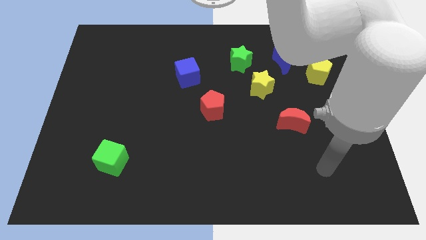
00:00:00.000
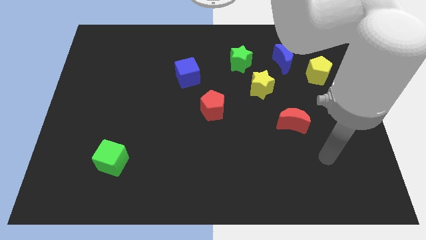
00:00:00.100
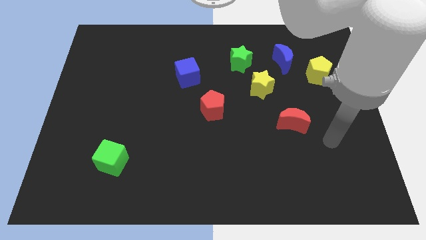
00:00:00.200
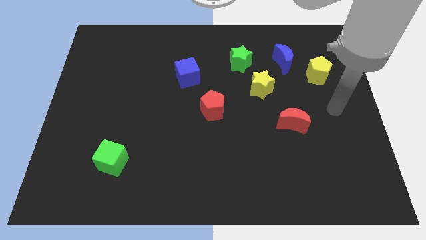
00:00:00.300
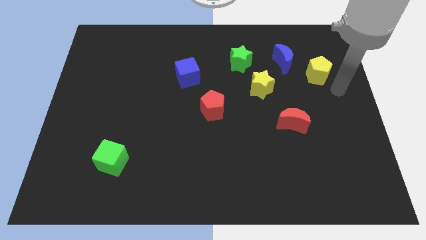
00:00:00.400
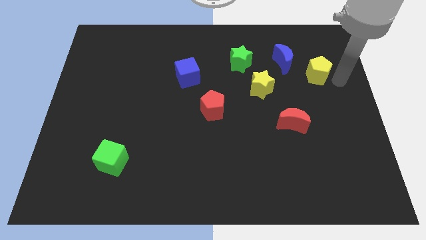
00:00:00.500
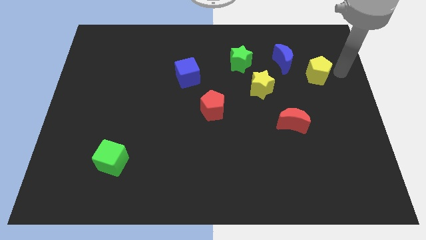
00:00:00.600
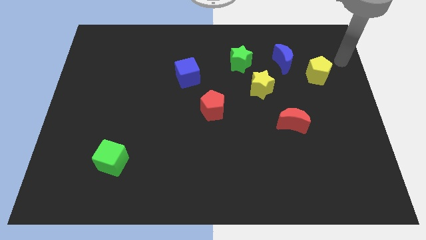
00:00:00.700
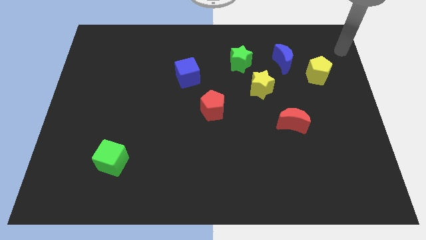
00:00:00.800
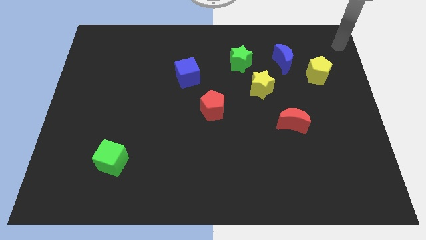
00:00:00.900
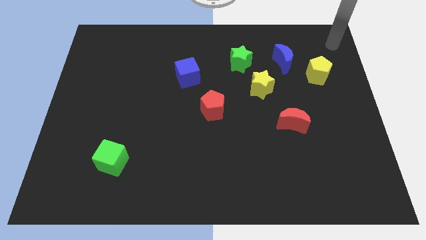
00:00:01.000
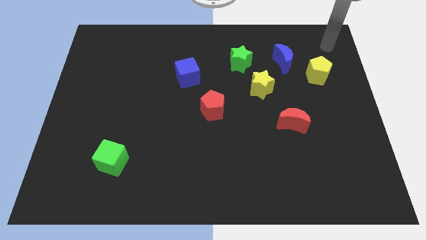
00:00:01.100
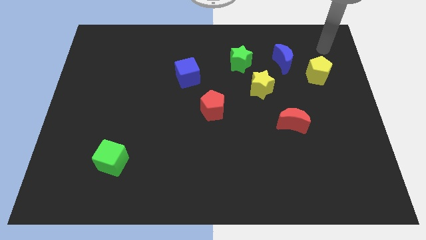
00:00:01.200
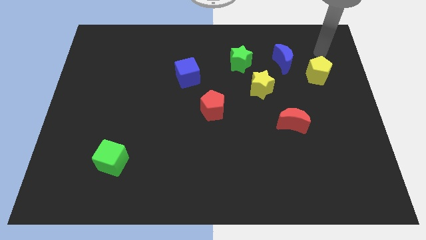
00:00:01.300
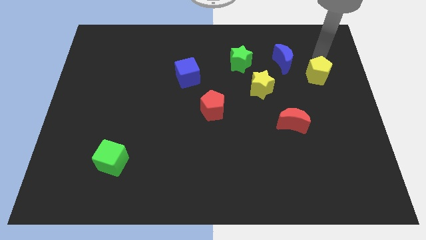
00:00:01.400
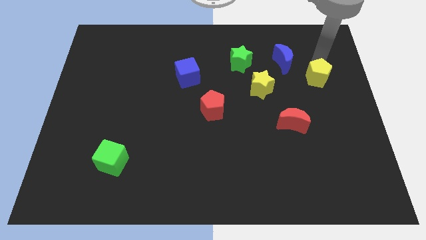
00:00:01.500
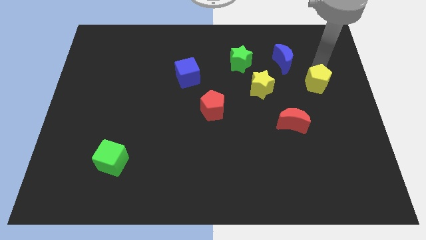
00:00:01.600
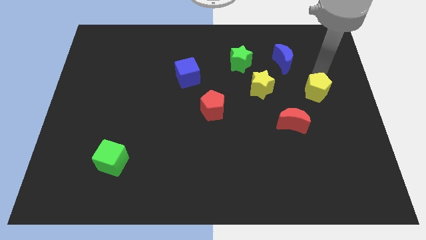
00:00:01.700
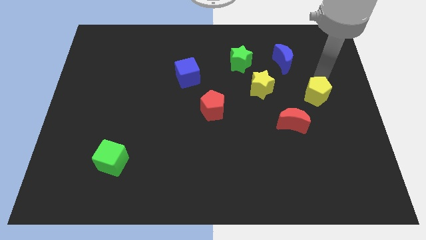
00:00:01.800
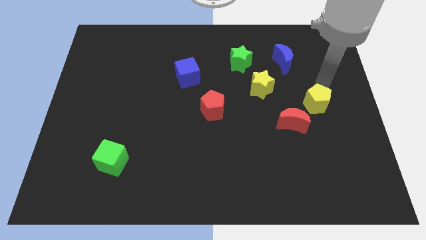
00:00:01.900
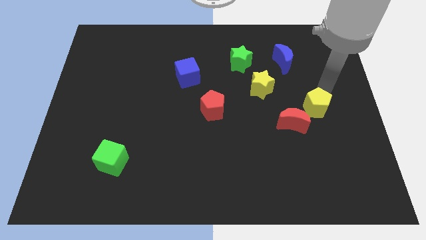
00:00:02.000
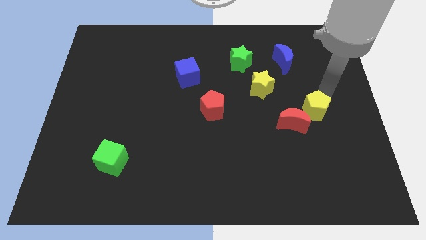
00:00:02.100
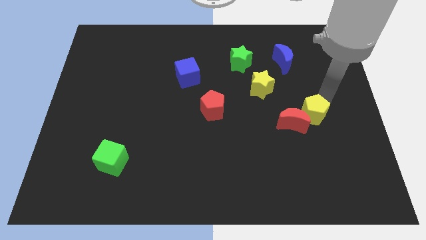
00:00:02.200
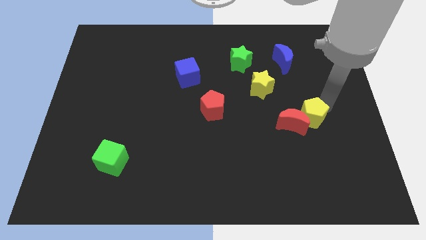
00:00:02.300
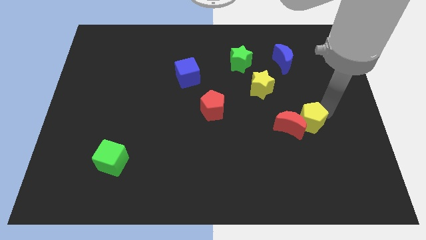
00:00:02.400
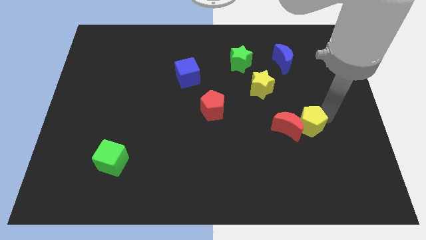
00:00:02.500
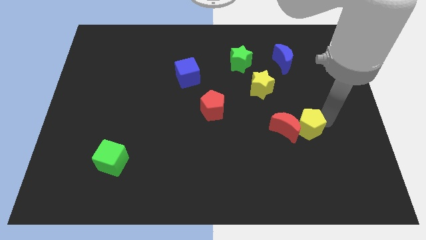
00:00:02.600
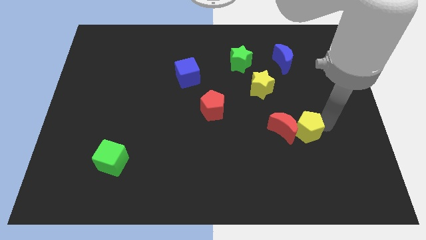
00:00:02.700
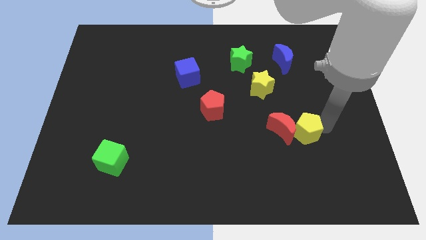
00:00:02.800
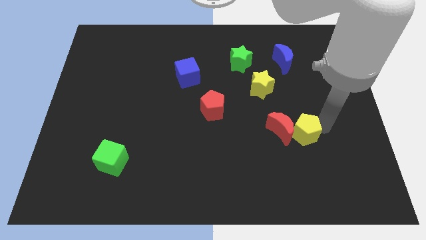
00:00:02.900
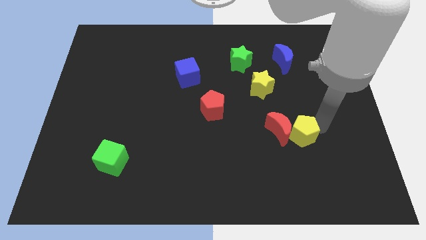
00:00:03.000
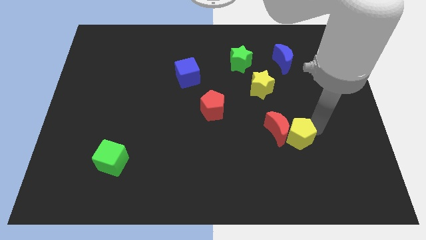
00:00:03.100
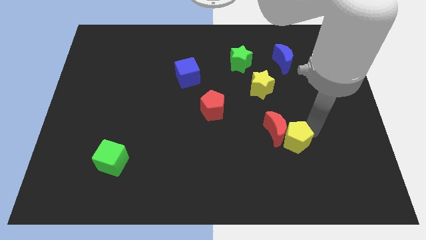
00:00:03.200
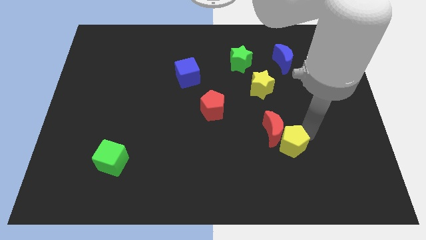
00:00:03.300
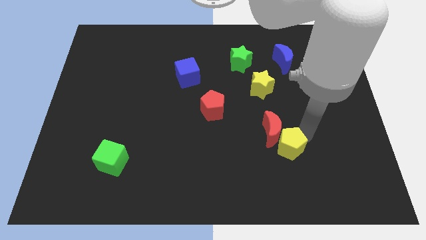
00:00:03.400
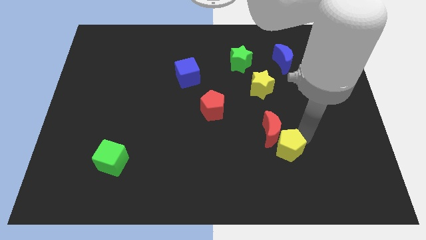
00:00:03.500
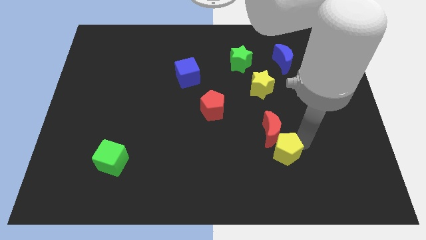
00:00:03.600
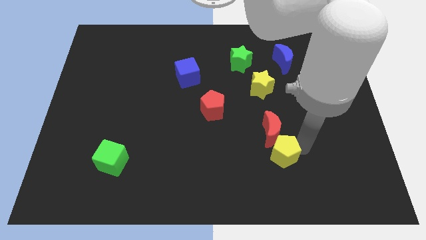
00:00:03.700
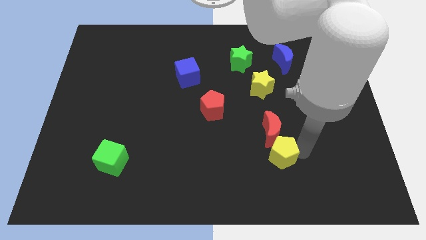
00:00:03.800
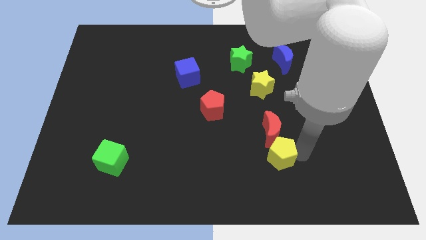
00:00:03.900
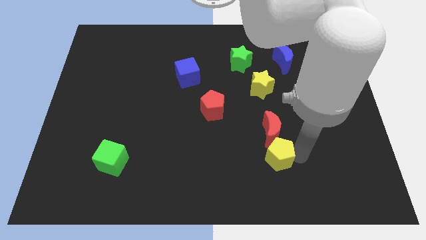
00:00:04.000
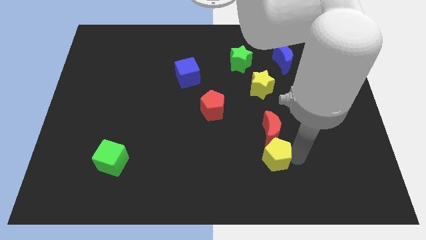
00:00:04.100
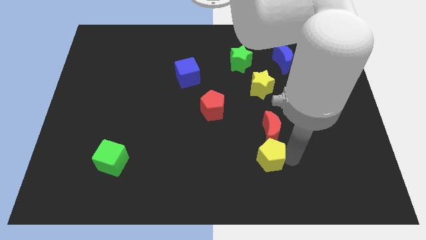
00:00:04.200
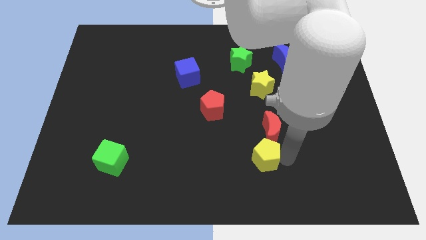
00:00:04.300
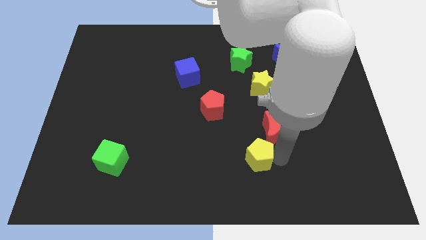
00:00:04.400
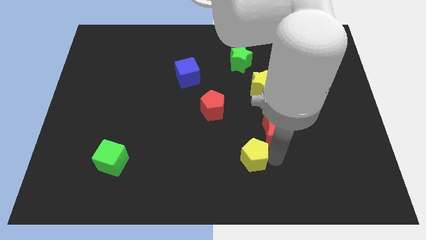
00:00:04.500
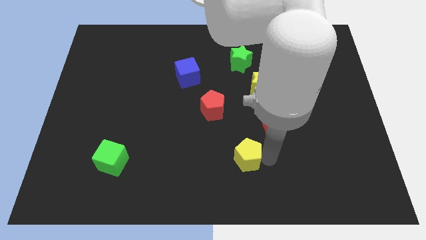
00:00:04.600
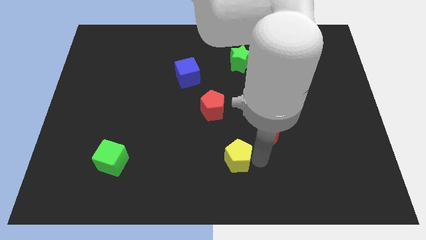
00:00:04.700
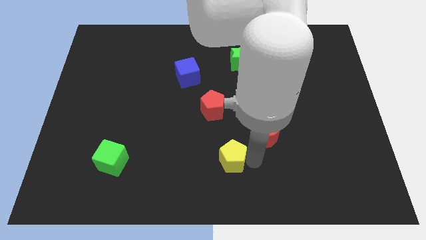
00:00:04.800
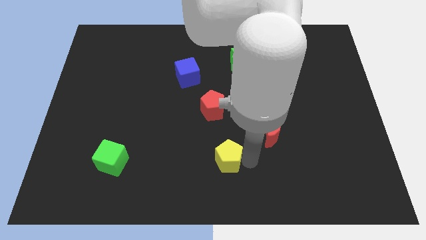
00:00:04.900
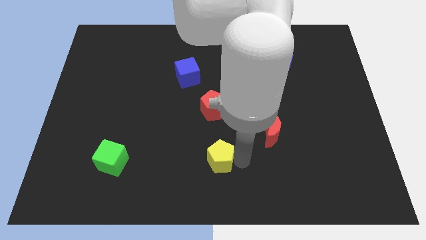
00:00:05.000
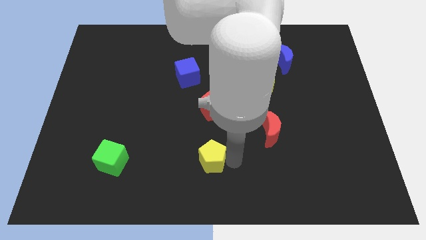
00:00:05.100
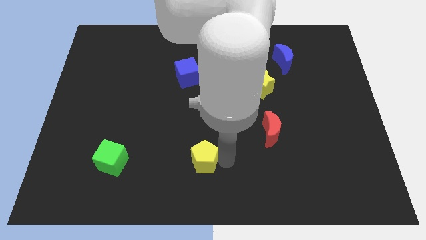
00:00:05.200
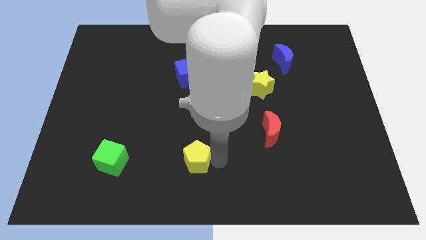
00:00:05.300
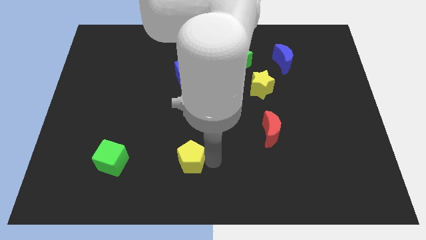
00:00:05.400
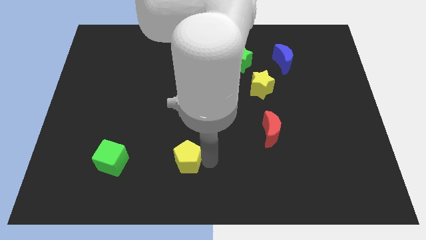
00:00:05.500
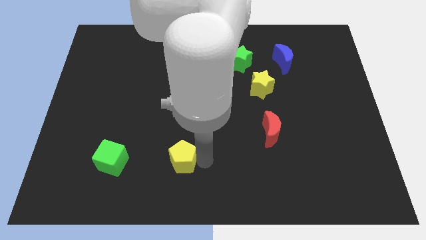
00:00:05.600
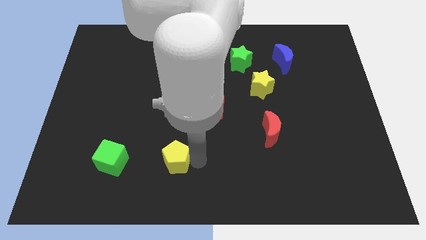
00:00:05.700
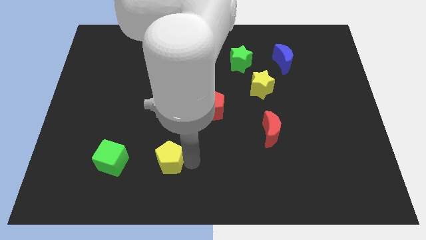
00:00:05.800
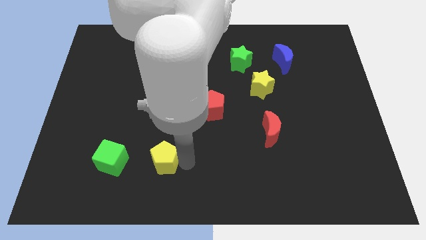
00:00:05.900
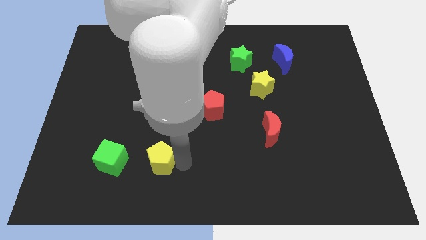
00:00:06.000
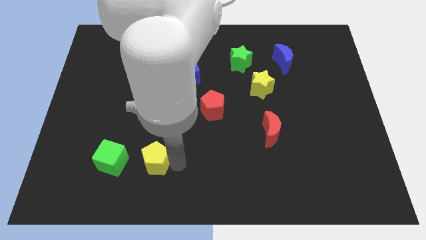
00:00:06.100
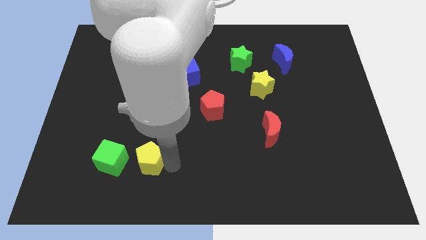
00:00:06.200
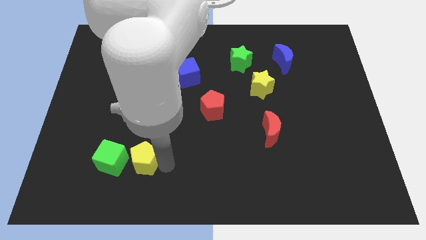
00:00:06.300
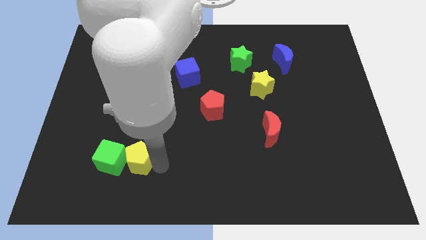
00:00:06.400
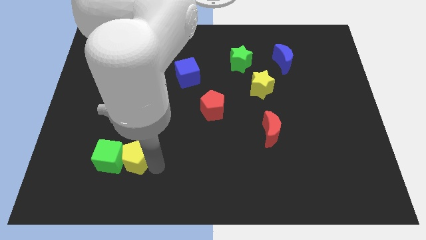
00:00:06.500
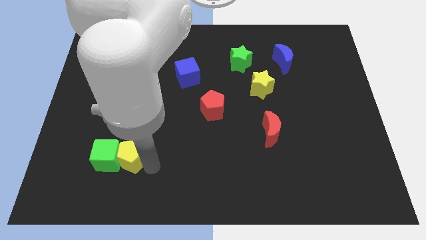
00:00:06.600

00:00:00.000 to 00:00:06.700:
slide the yellow pentagon close to the green cube

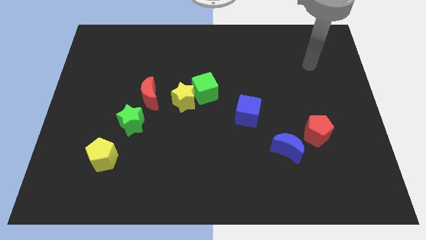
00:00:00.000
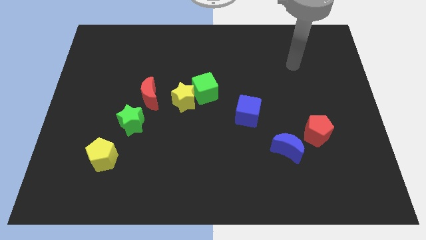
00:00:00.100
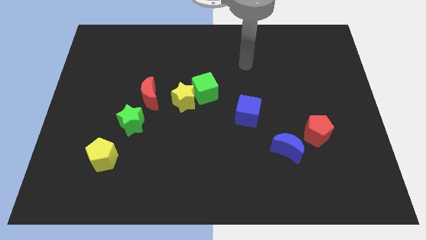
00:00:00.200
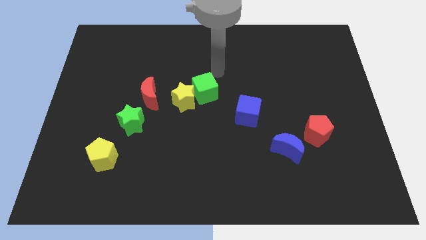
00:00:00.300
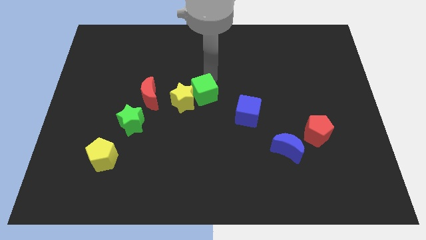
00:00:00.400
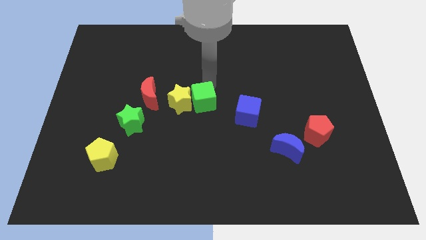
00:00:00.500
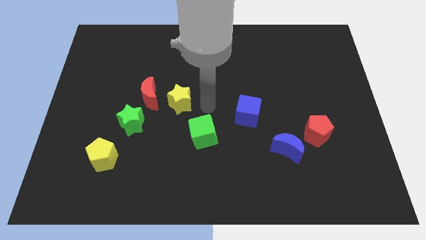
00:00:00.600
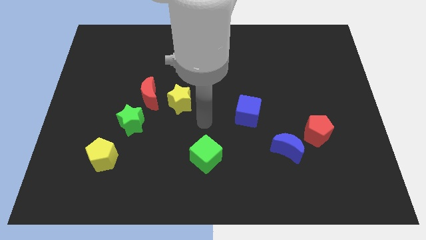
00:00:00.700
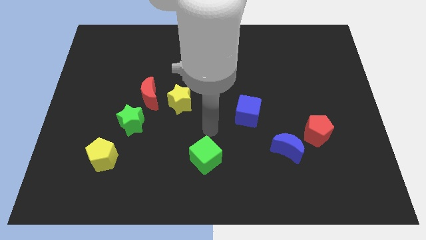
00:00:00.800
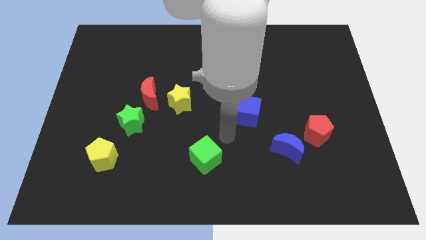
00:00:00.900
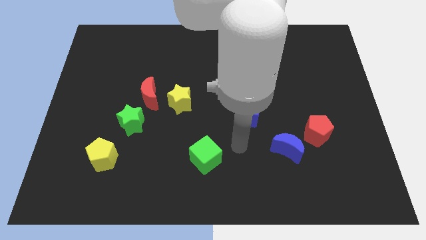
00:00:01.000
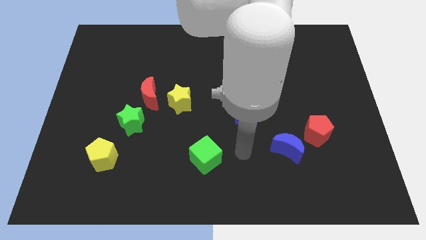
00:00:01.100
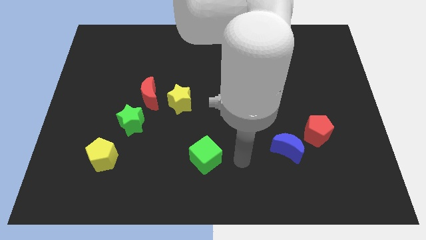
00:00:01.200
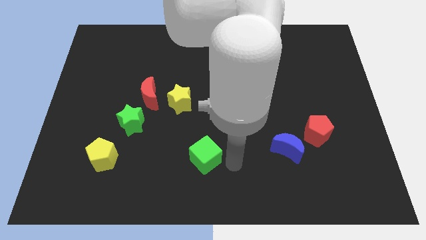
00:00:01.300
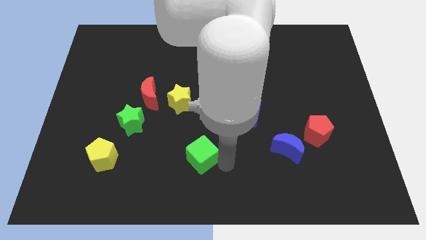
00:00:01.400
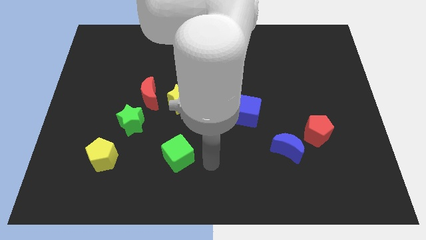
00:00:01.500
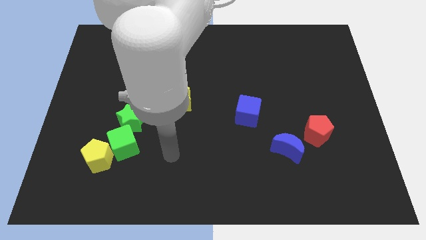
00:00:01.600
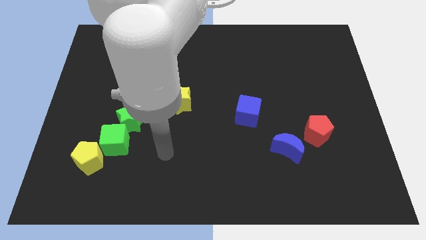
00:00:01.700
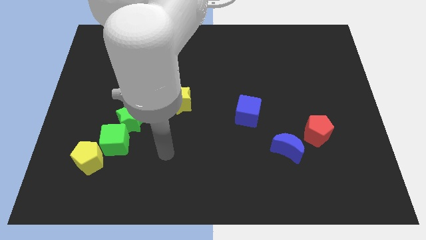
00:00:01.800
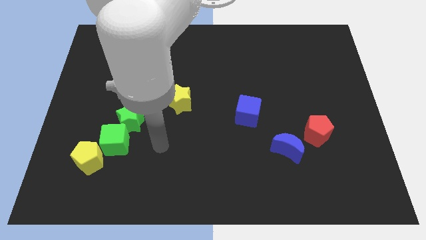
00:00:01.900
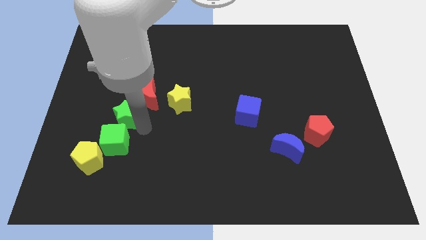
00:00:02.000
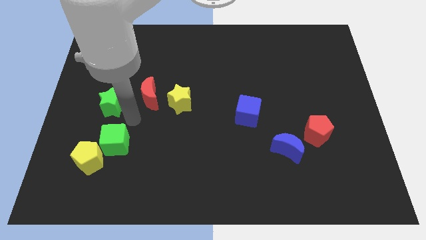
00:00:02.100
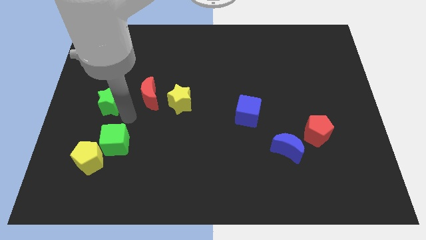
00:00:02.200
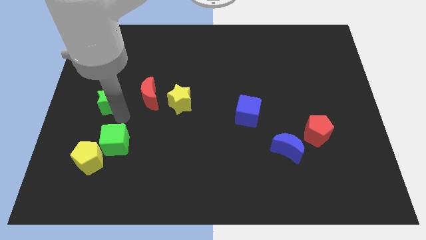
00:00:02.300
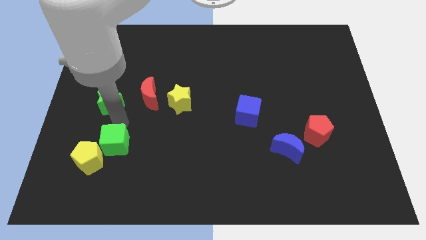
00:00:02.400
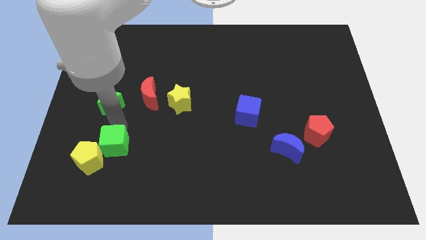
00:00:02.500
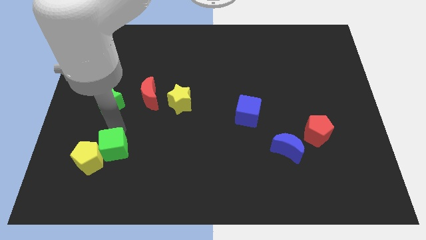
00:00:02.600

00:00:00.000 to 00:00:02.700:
slide the green cube close to the yellow pentagon
